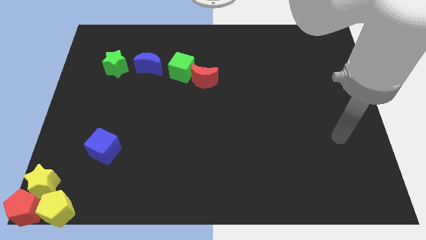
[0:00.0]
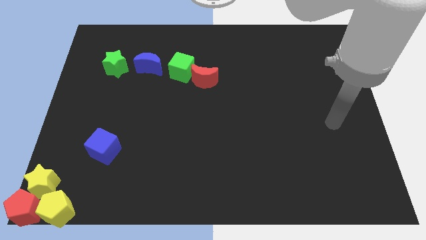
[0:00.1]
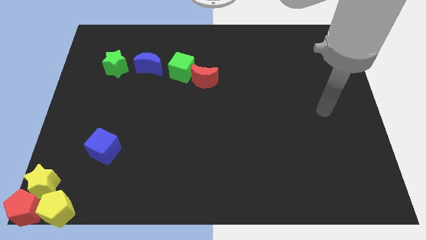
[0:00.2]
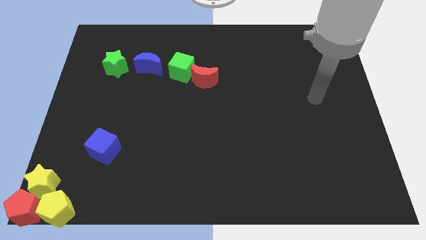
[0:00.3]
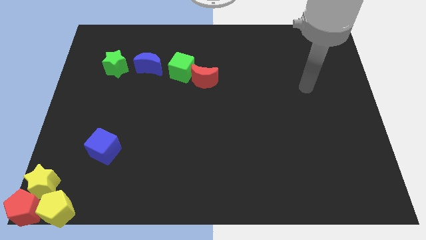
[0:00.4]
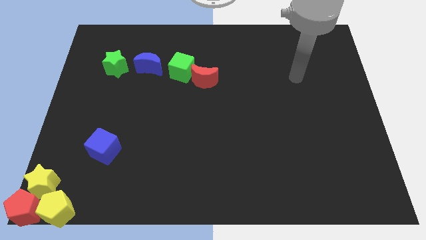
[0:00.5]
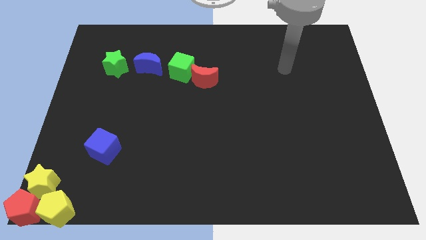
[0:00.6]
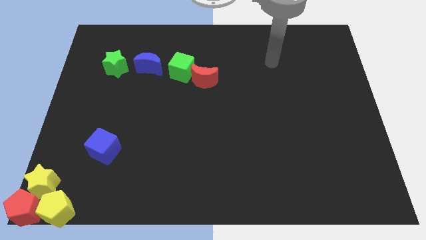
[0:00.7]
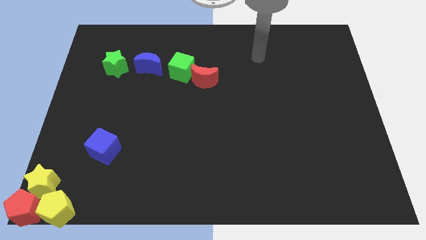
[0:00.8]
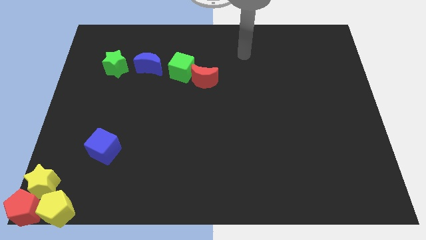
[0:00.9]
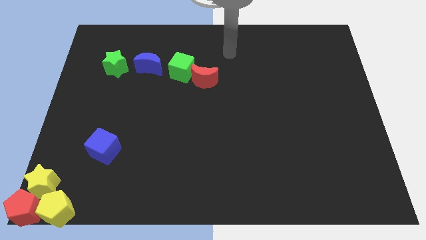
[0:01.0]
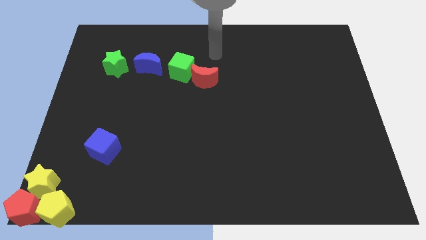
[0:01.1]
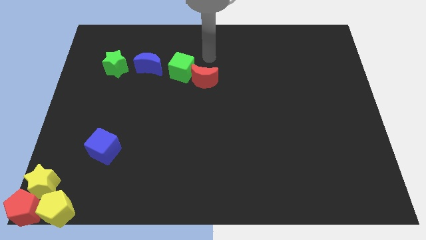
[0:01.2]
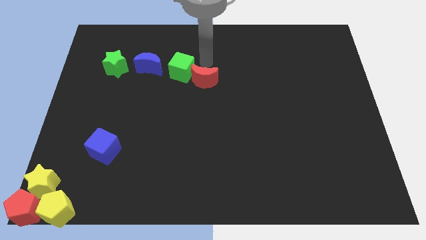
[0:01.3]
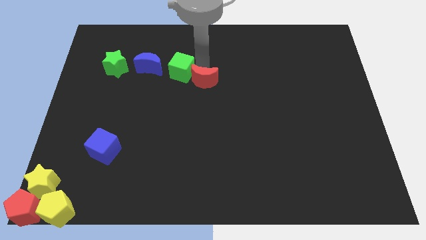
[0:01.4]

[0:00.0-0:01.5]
move the arm towards red crescent

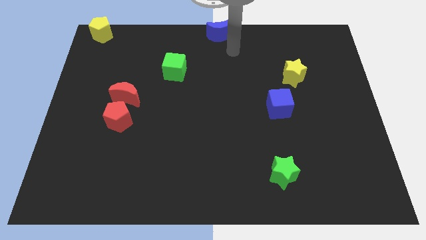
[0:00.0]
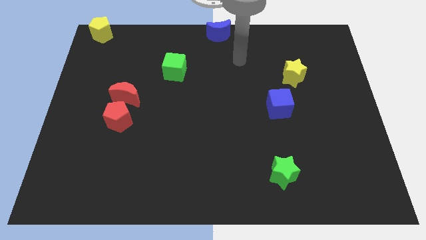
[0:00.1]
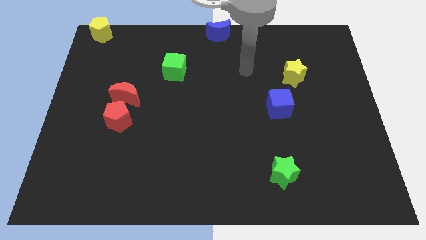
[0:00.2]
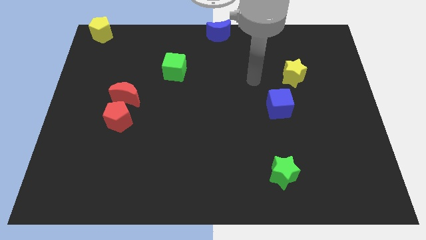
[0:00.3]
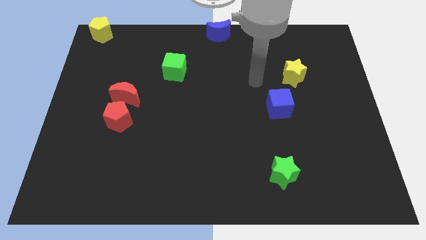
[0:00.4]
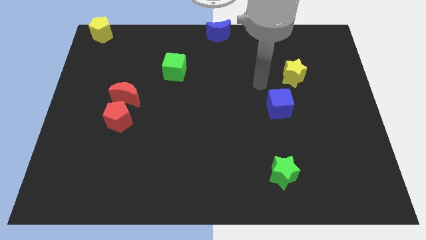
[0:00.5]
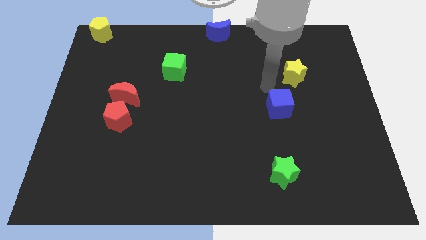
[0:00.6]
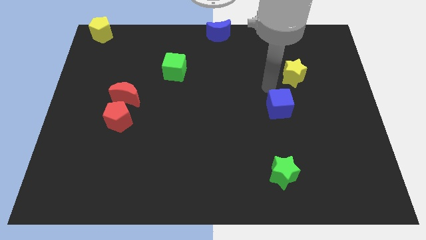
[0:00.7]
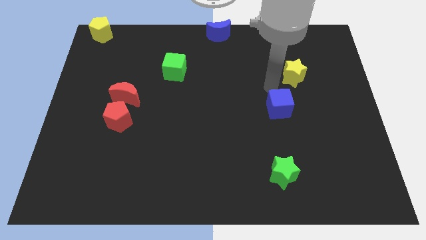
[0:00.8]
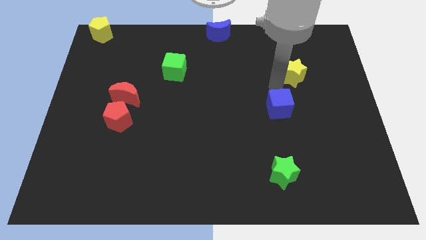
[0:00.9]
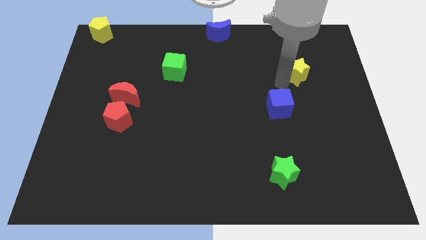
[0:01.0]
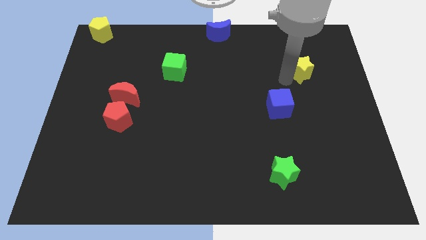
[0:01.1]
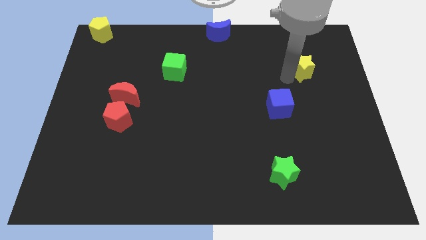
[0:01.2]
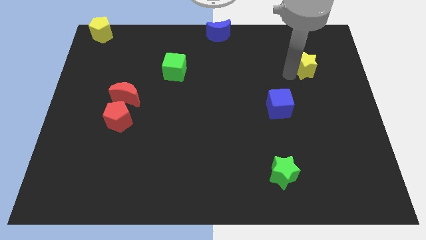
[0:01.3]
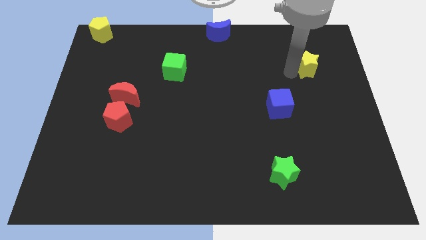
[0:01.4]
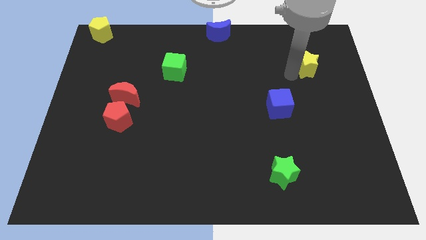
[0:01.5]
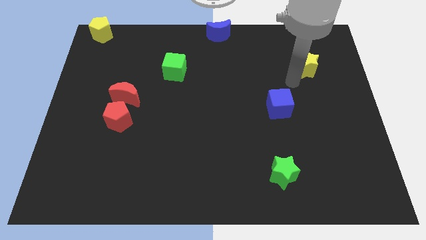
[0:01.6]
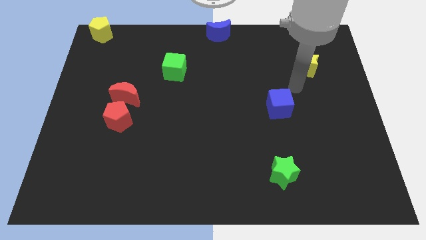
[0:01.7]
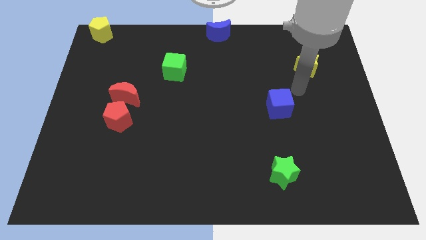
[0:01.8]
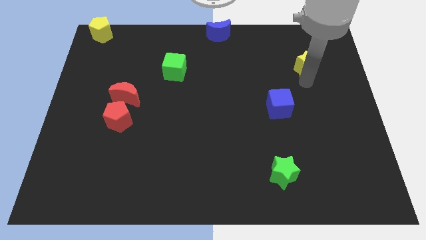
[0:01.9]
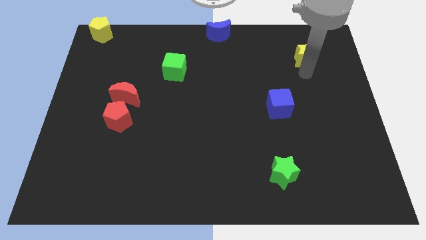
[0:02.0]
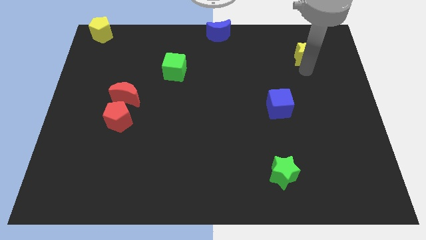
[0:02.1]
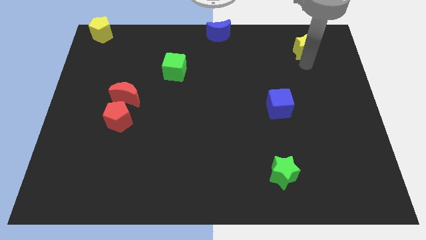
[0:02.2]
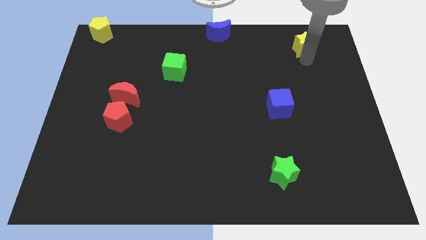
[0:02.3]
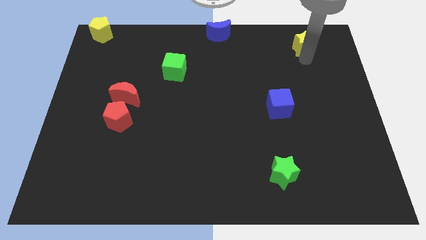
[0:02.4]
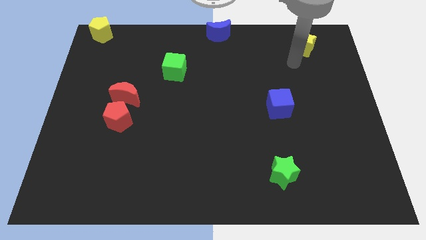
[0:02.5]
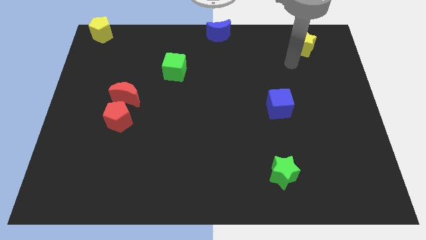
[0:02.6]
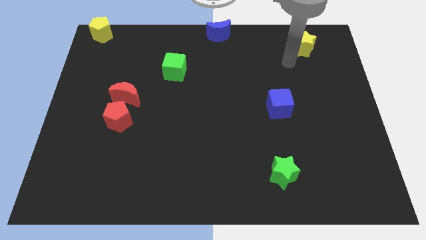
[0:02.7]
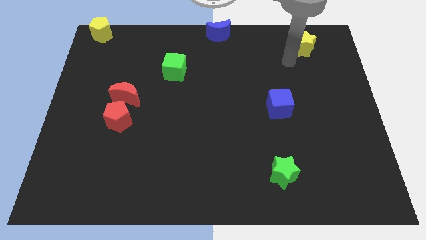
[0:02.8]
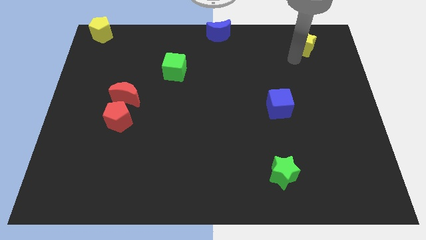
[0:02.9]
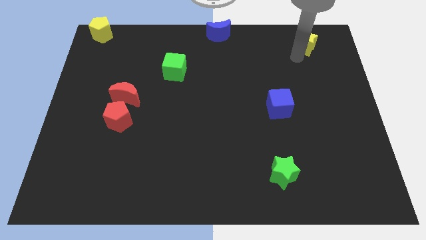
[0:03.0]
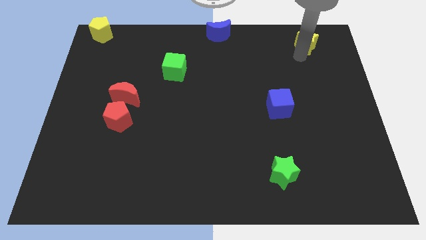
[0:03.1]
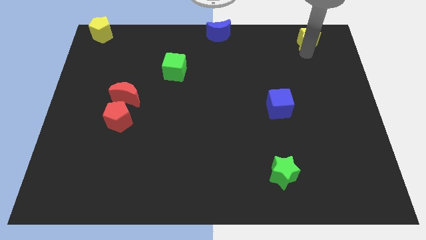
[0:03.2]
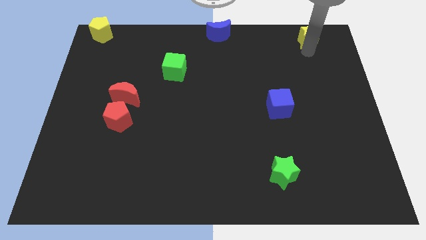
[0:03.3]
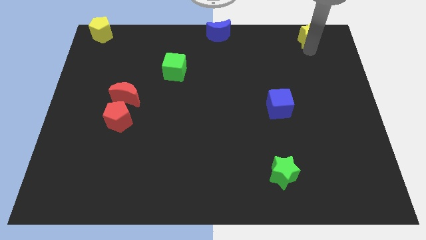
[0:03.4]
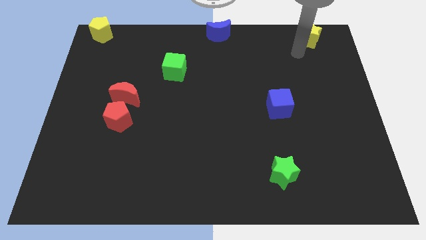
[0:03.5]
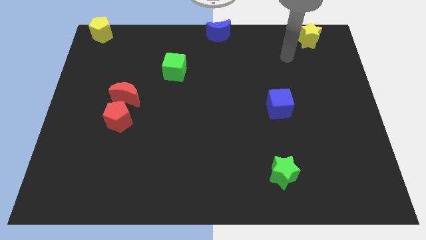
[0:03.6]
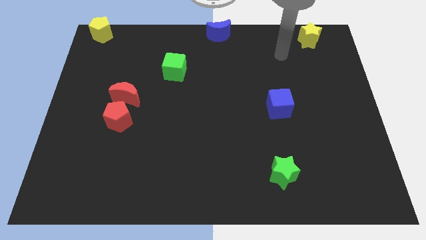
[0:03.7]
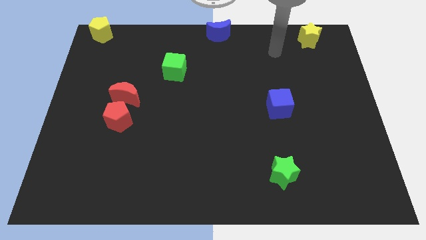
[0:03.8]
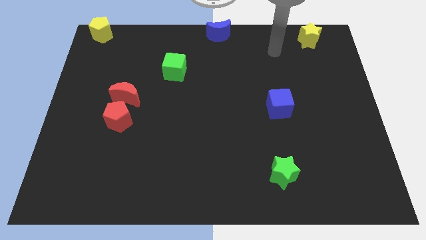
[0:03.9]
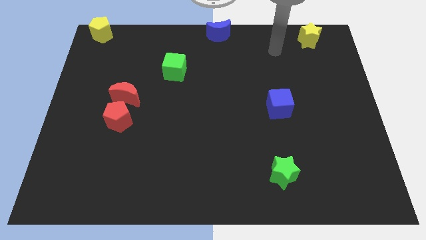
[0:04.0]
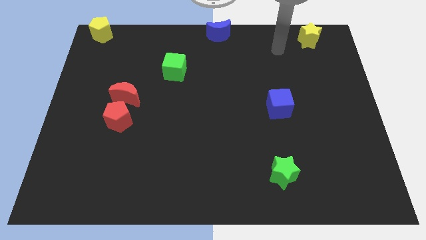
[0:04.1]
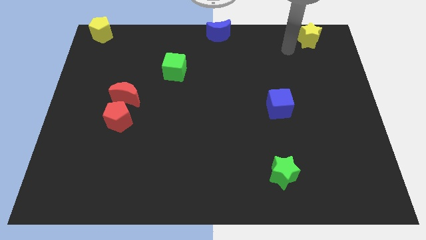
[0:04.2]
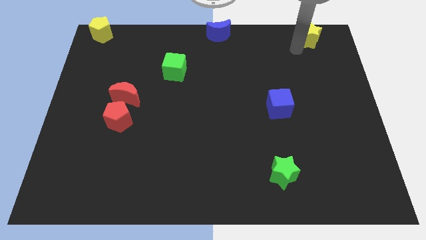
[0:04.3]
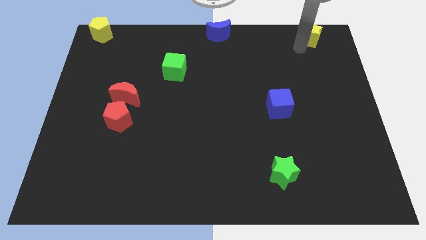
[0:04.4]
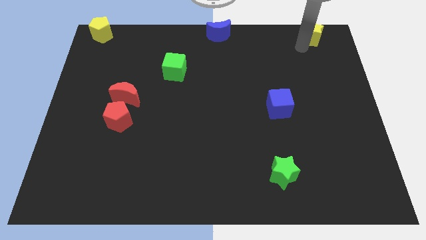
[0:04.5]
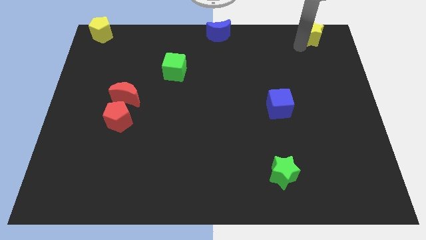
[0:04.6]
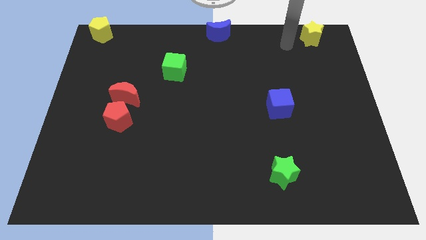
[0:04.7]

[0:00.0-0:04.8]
push the yellow star to the top right of the blue cube

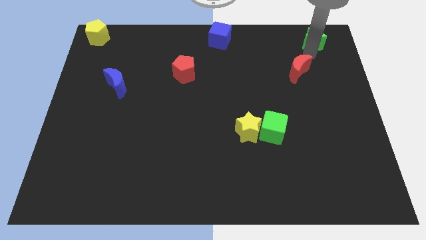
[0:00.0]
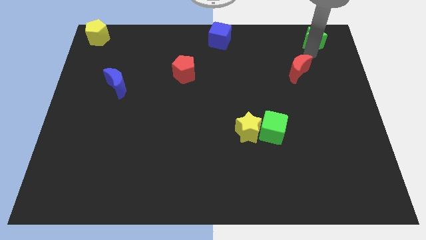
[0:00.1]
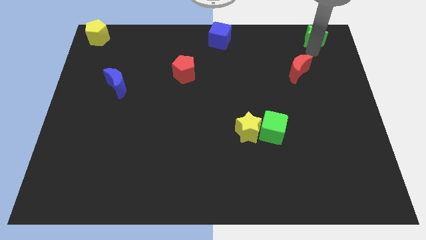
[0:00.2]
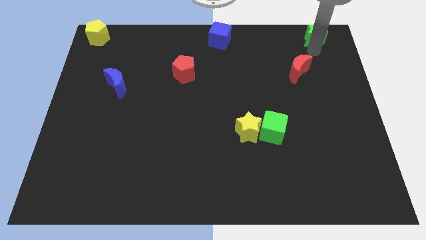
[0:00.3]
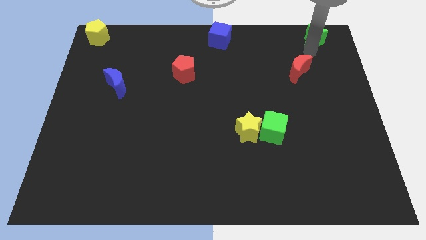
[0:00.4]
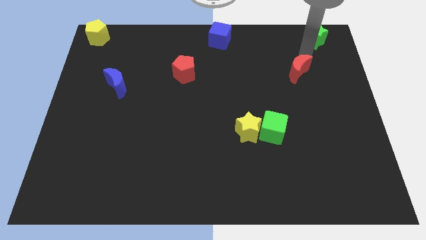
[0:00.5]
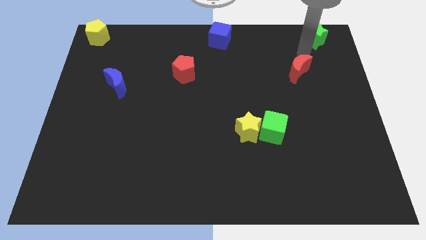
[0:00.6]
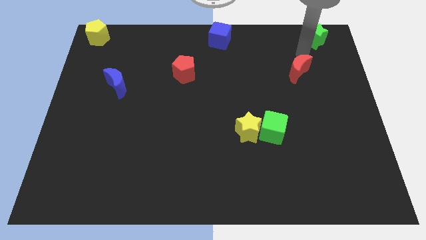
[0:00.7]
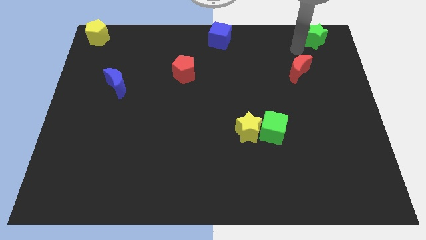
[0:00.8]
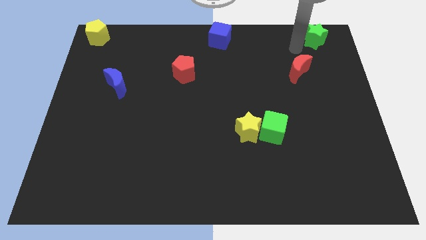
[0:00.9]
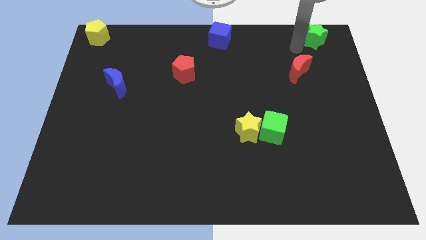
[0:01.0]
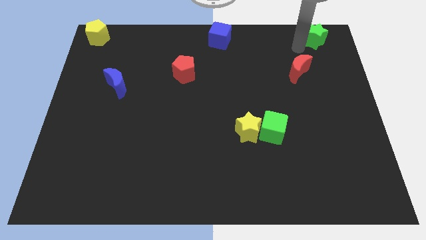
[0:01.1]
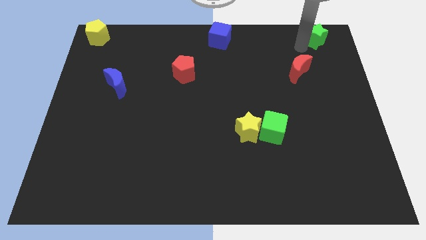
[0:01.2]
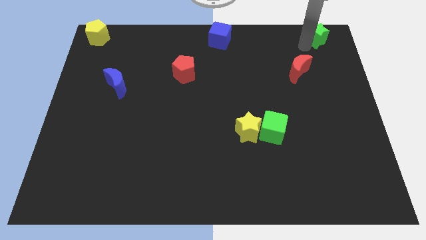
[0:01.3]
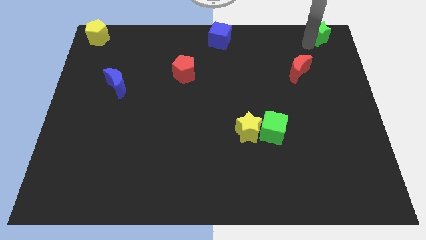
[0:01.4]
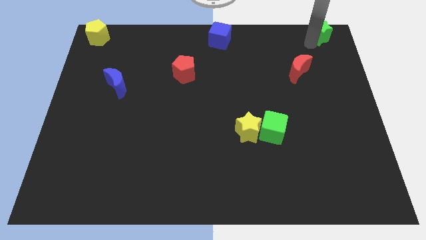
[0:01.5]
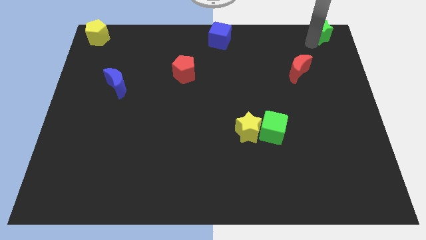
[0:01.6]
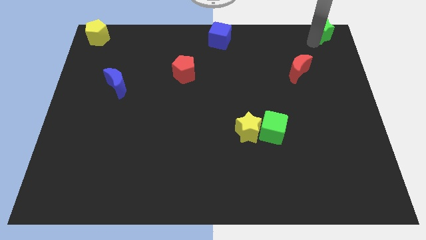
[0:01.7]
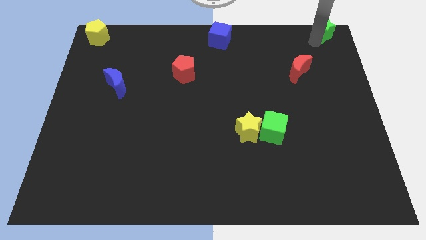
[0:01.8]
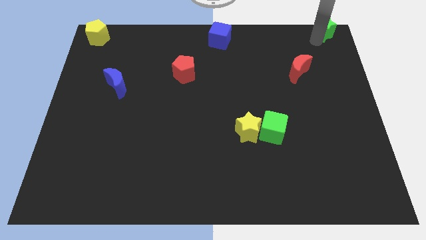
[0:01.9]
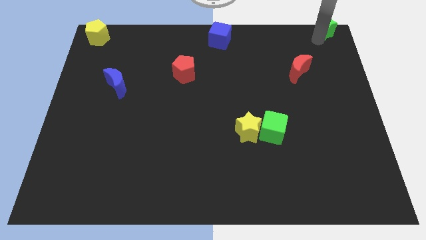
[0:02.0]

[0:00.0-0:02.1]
move the green star towards top right corner of the board

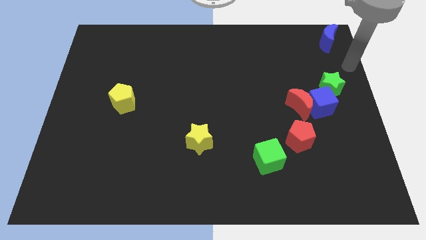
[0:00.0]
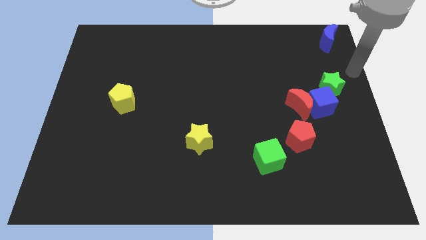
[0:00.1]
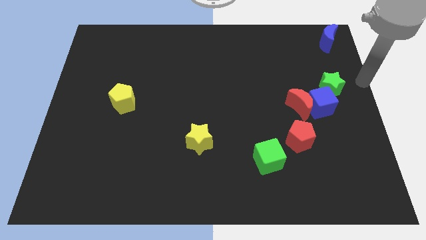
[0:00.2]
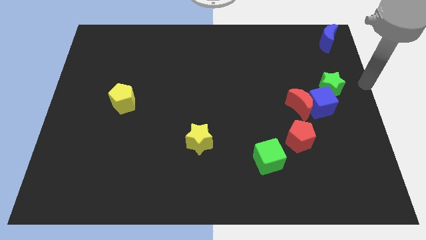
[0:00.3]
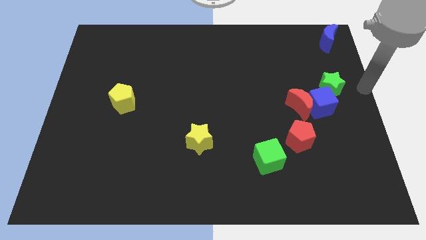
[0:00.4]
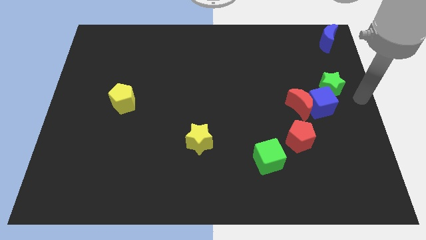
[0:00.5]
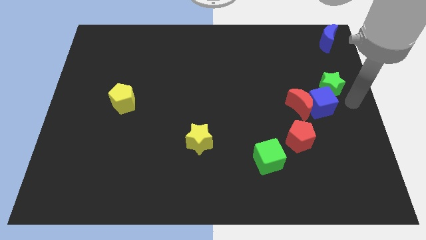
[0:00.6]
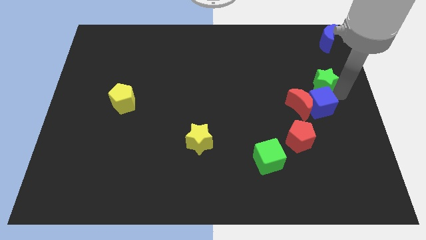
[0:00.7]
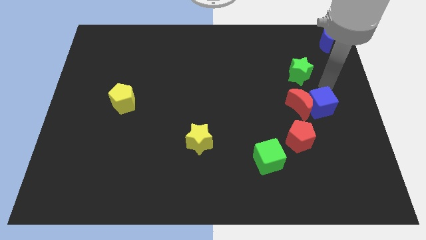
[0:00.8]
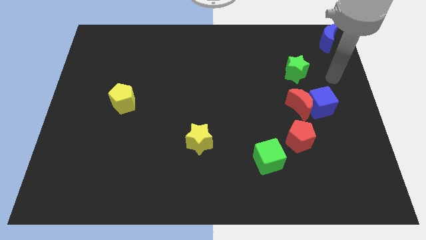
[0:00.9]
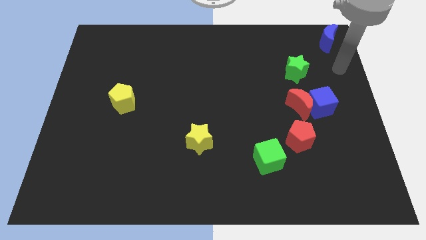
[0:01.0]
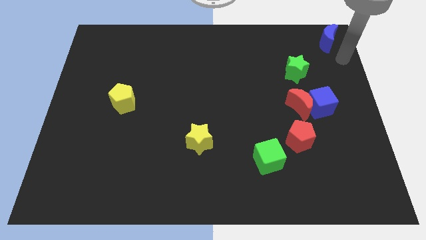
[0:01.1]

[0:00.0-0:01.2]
push the green star to the left of the board
